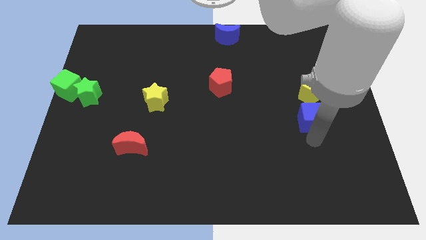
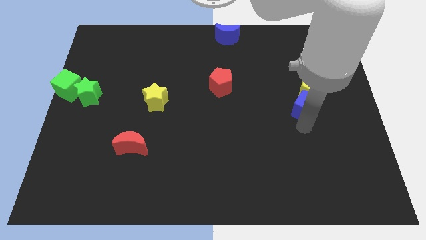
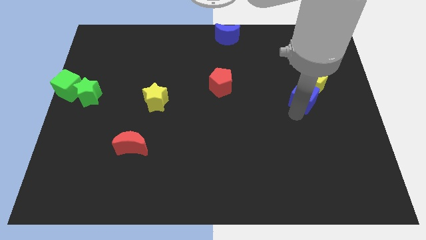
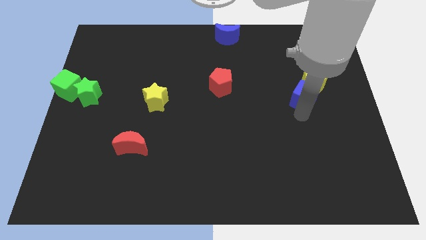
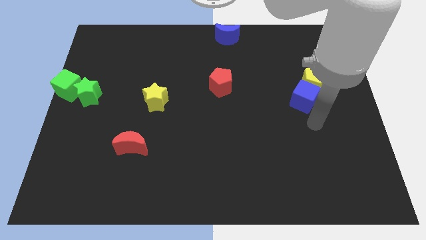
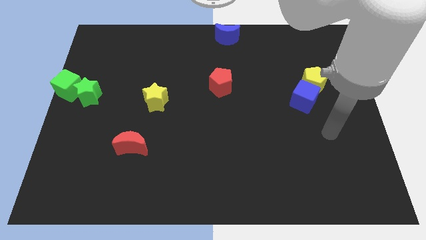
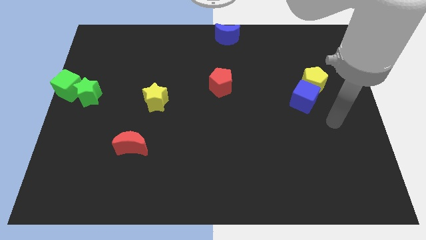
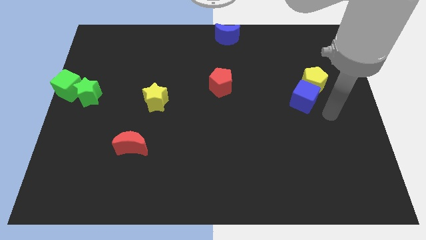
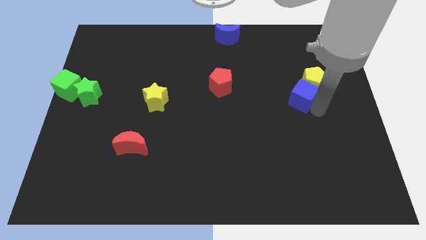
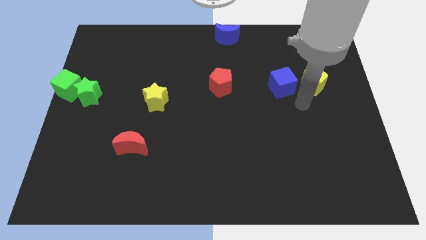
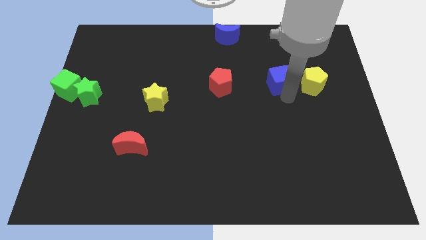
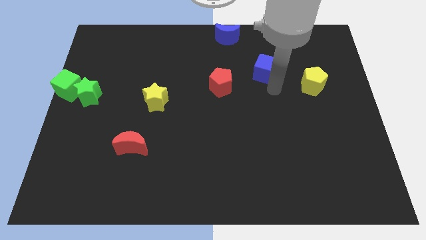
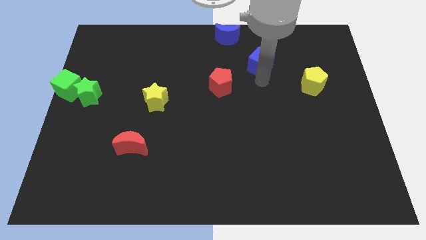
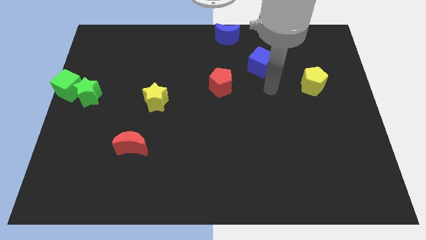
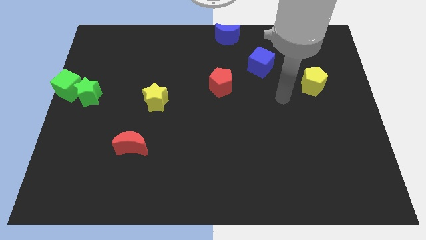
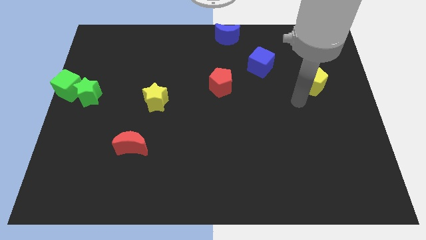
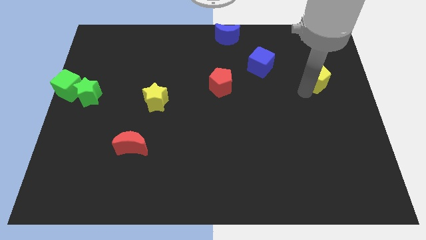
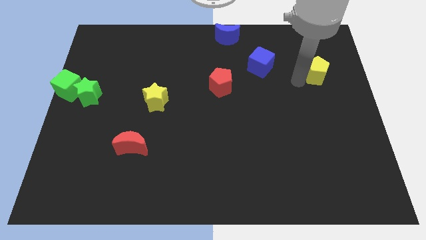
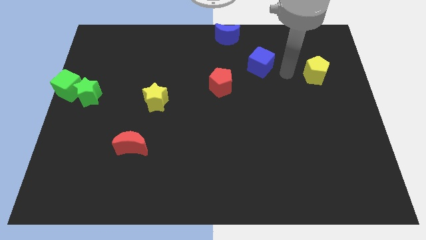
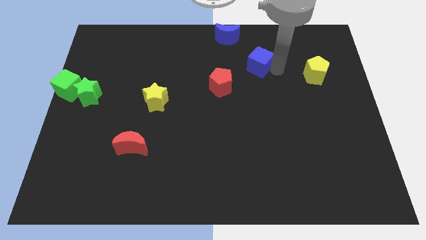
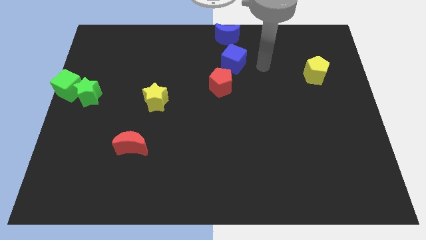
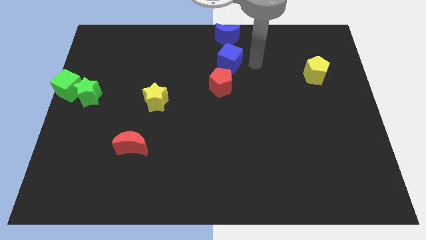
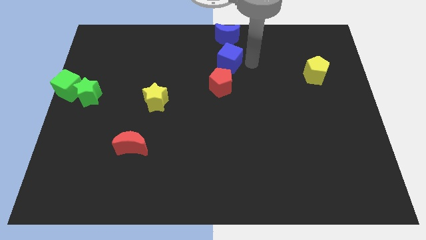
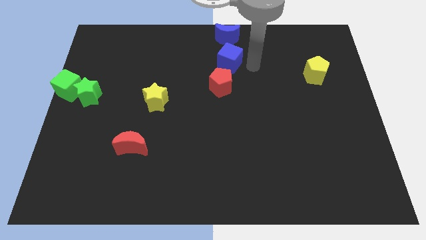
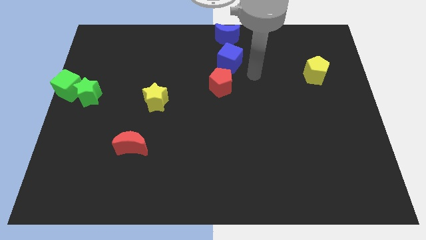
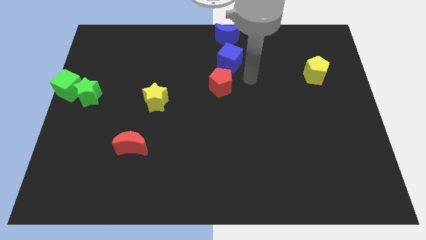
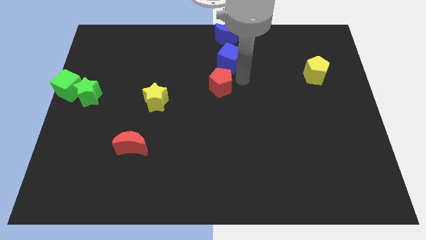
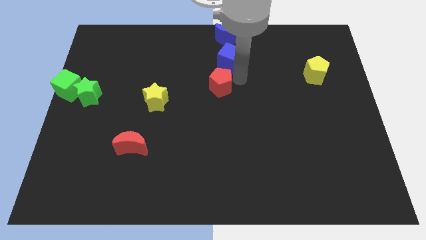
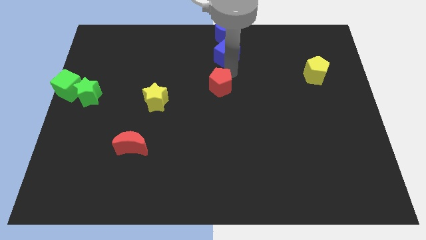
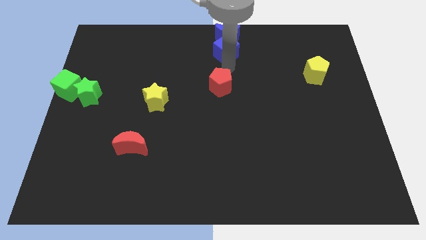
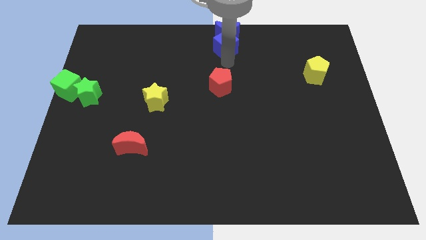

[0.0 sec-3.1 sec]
push the blue cube into the blue crescent

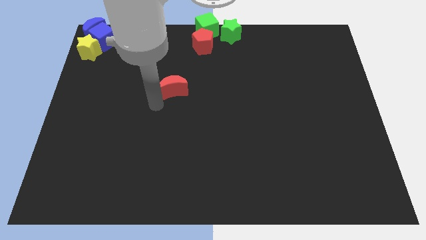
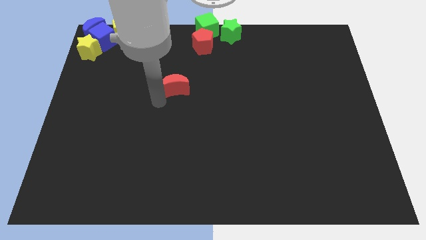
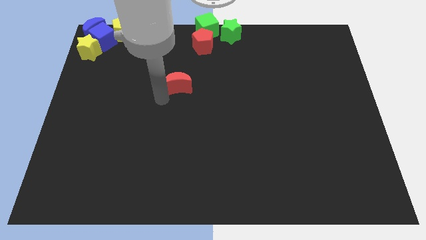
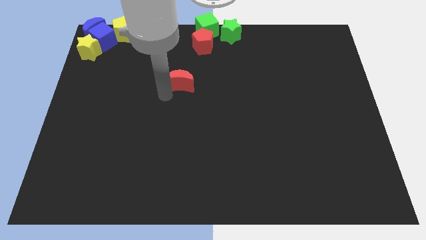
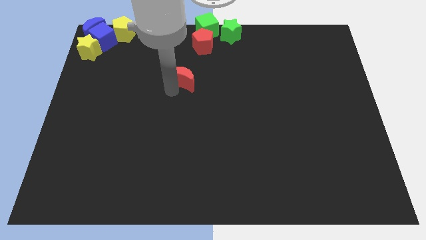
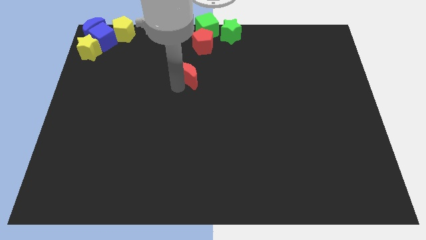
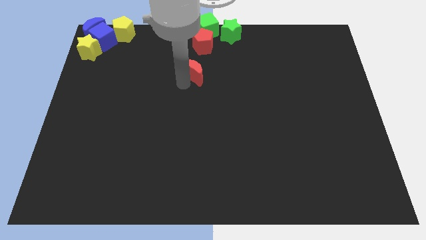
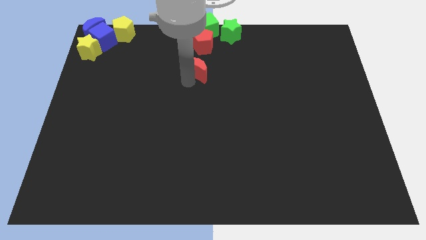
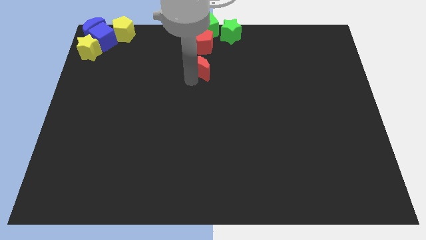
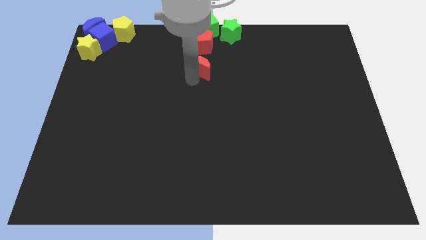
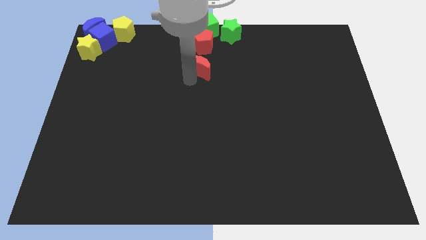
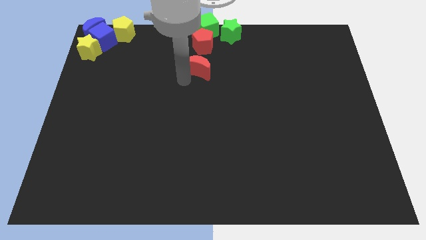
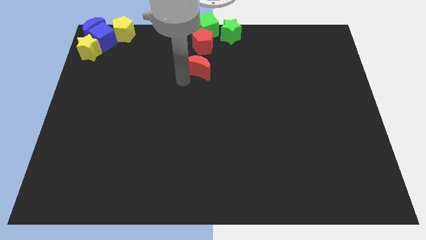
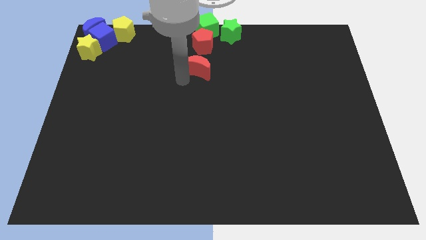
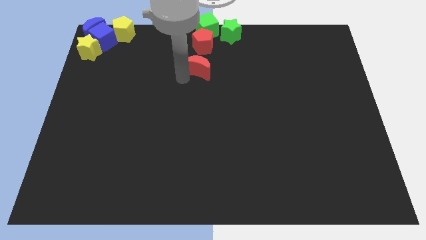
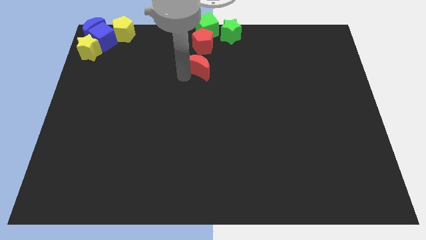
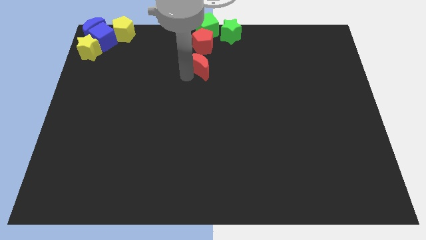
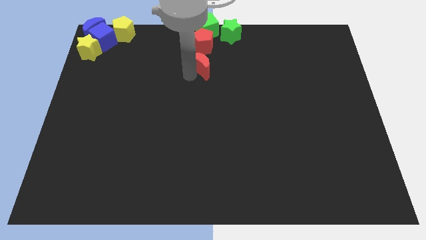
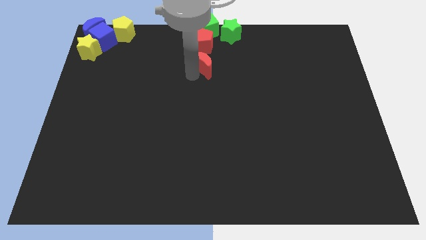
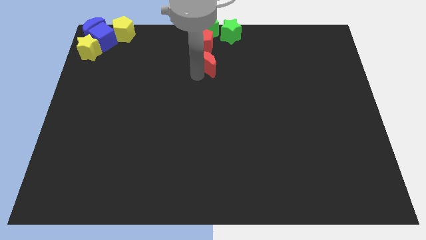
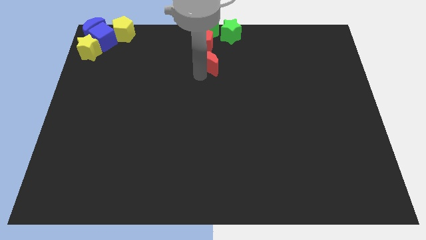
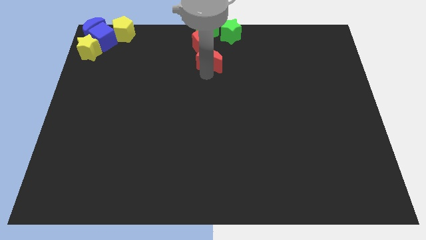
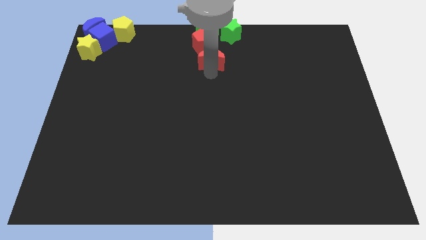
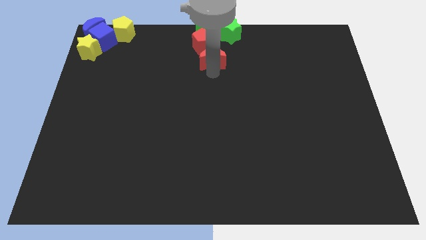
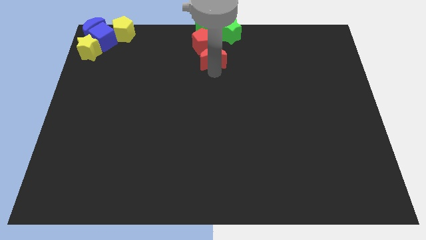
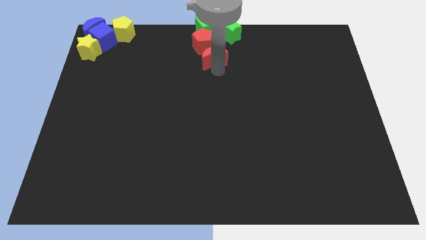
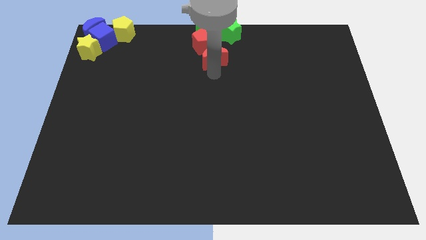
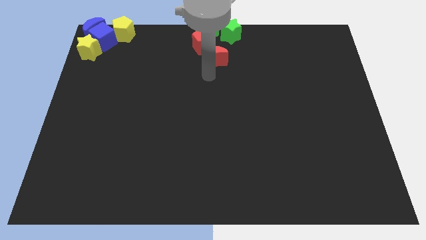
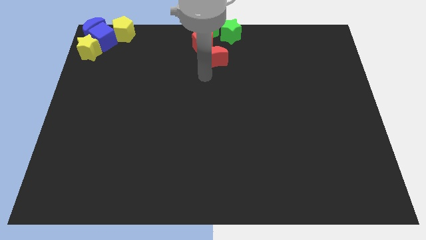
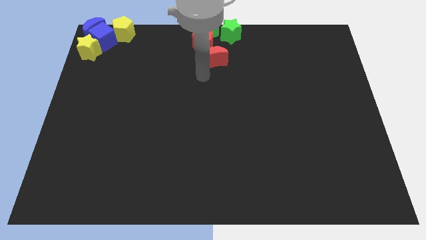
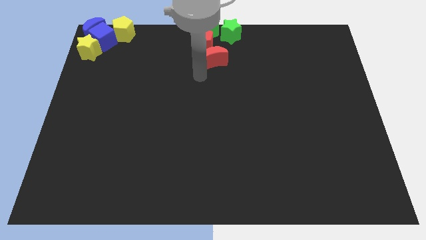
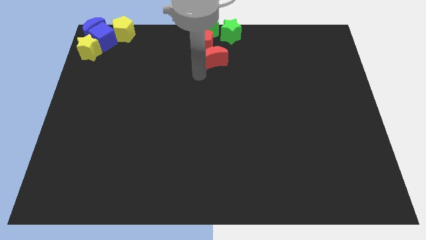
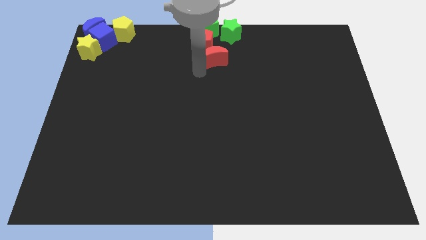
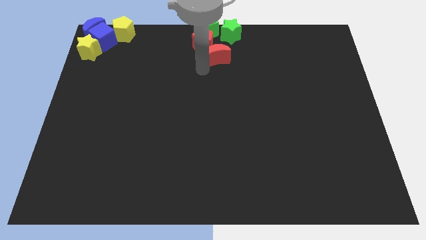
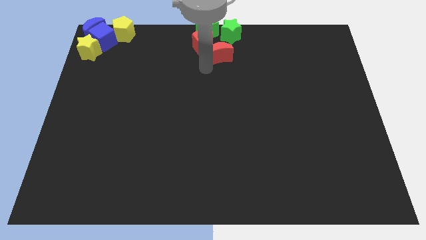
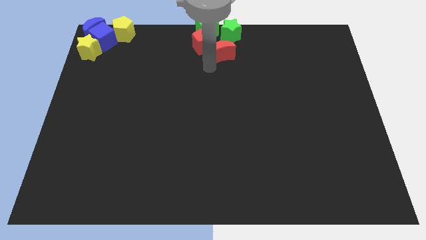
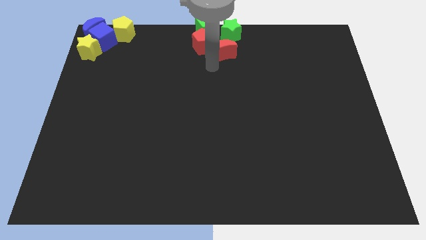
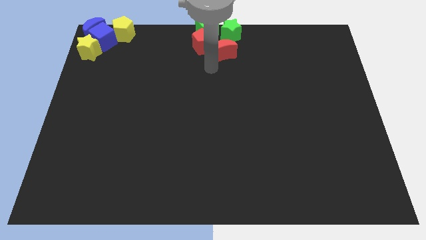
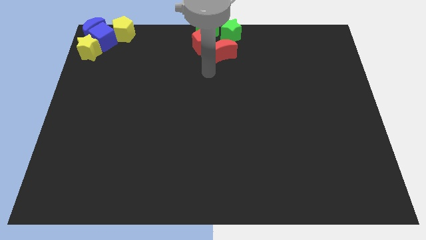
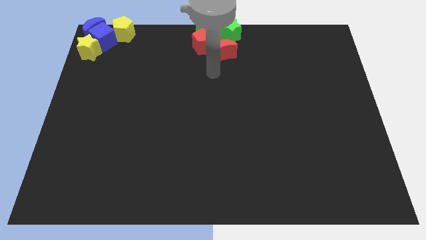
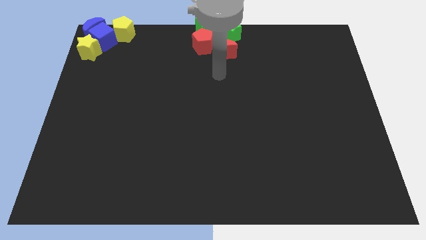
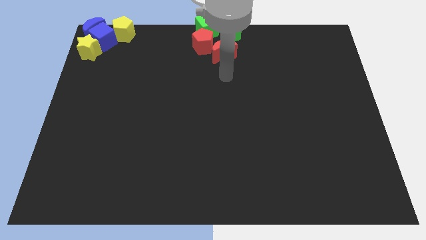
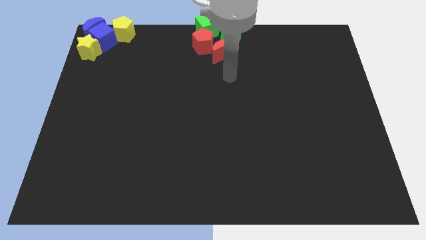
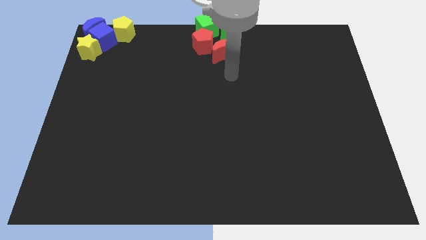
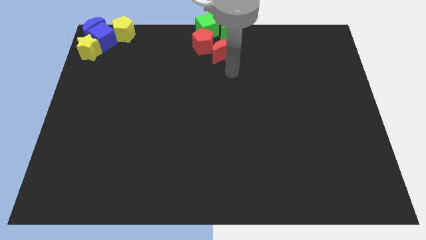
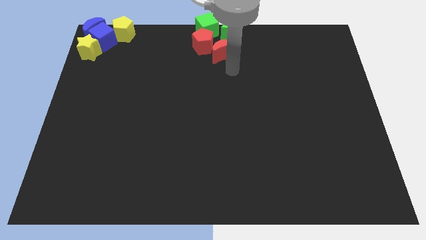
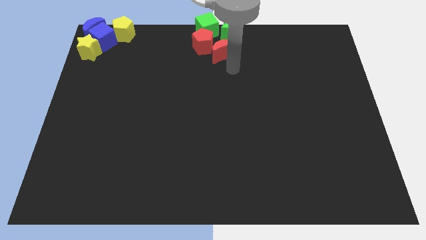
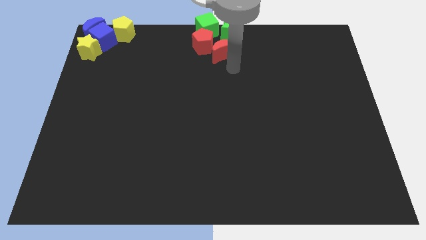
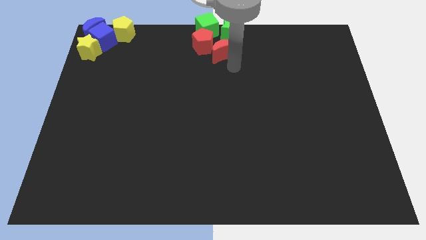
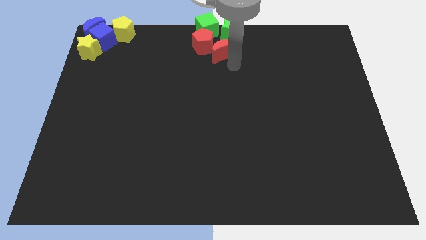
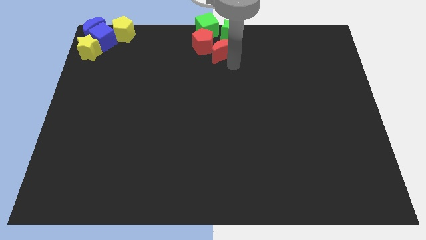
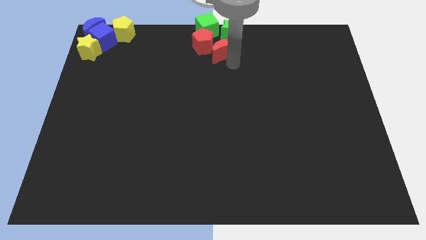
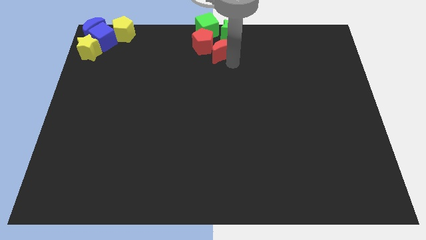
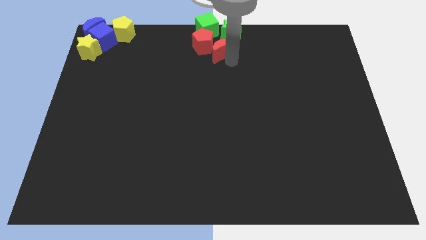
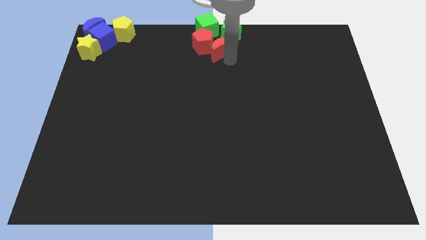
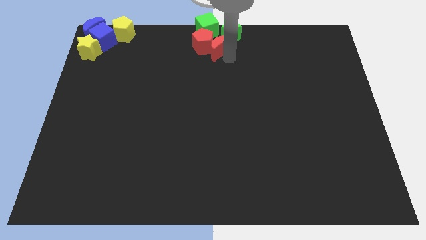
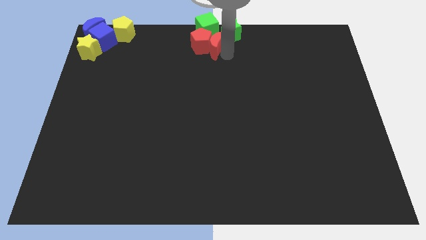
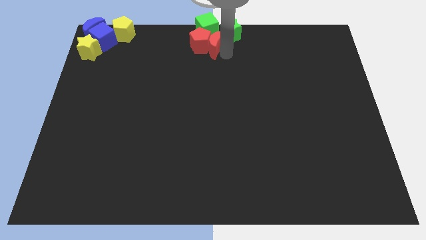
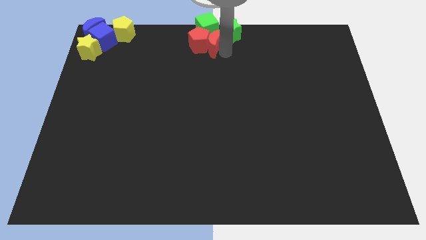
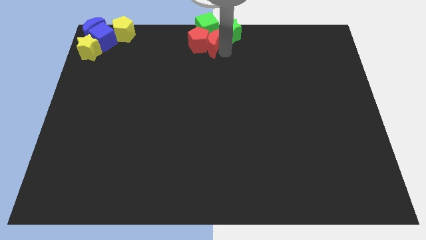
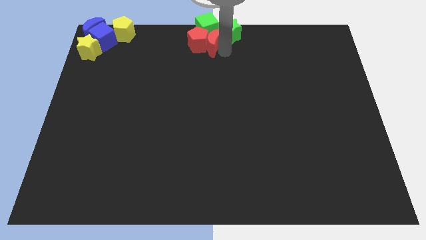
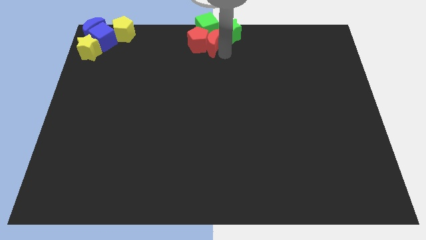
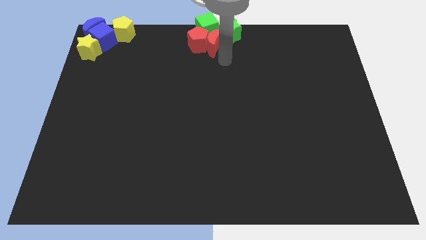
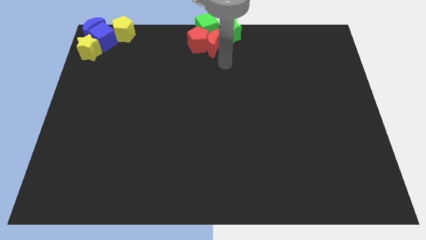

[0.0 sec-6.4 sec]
move red moon right beside the red pentagon
